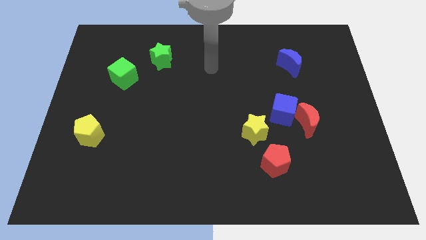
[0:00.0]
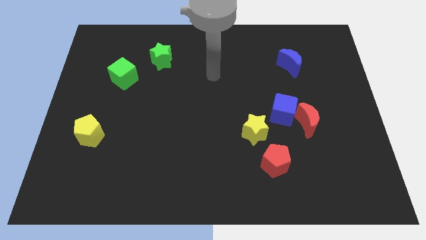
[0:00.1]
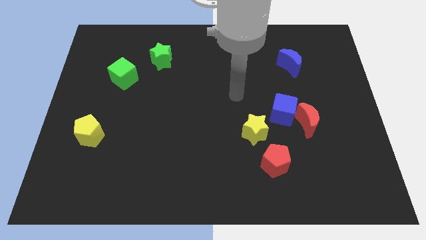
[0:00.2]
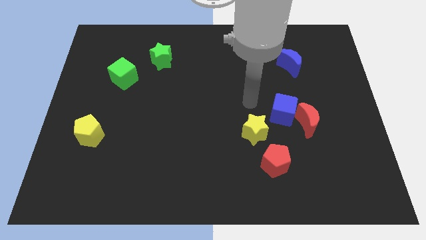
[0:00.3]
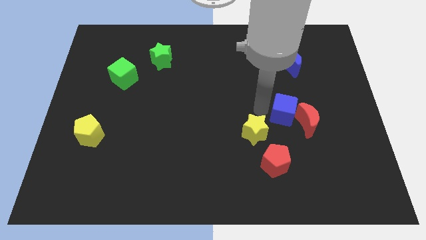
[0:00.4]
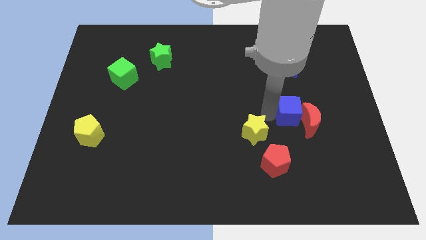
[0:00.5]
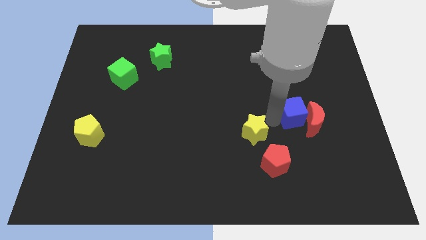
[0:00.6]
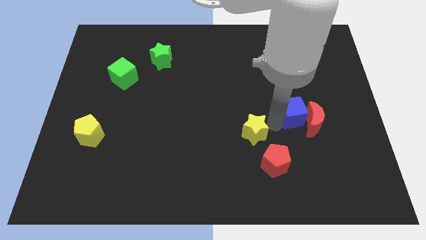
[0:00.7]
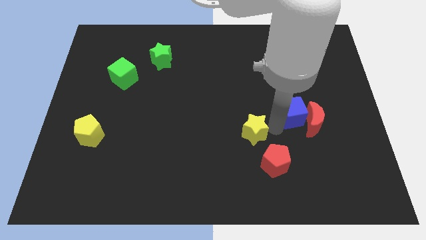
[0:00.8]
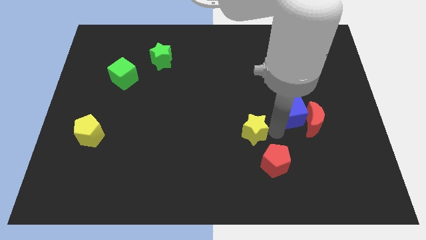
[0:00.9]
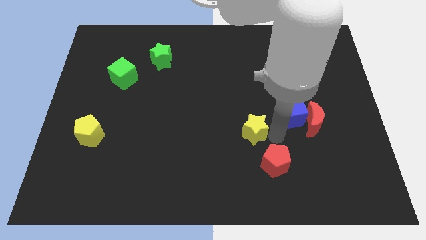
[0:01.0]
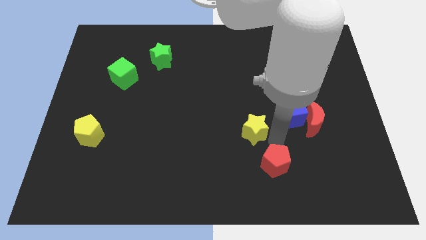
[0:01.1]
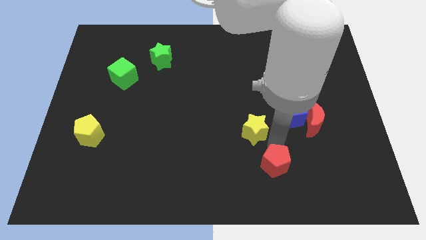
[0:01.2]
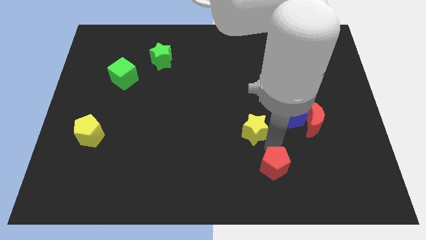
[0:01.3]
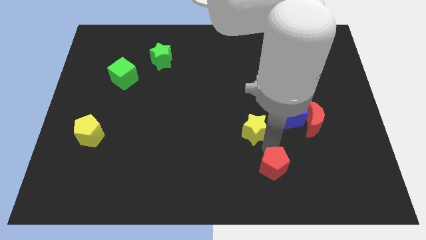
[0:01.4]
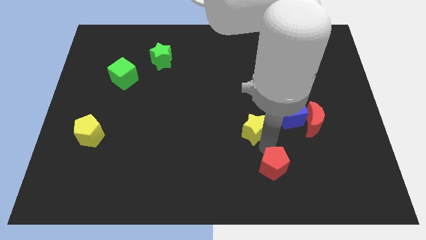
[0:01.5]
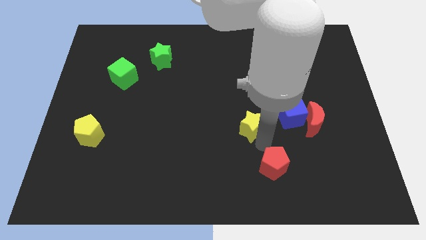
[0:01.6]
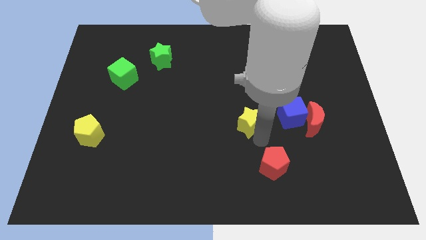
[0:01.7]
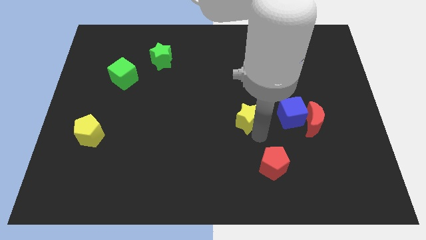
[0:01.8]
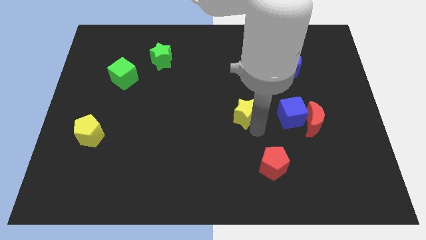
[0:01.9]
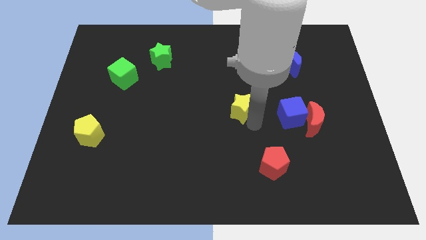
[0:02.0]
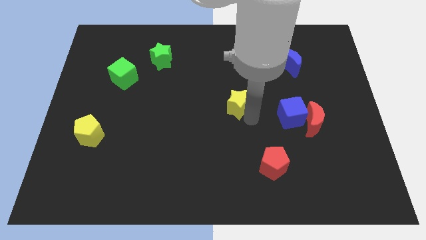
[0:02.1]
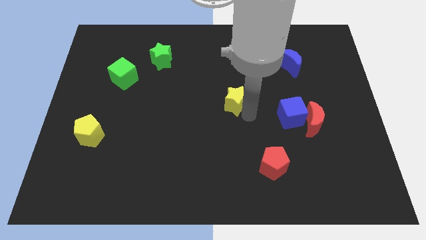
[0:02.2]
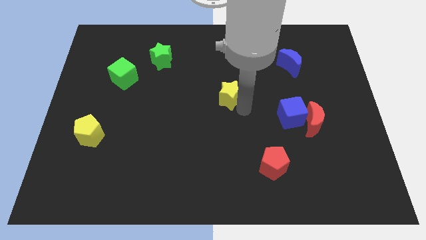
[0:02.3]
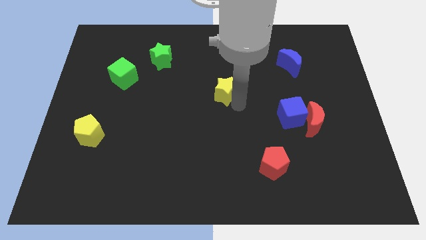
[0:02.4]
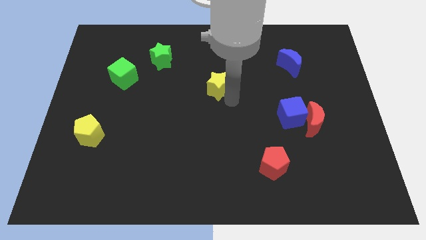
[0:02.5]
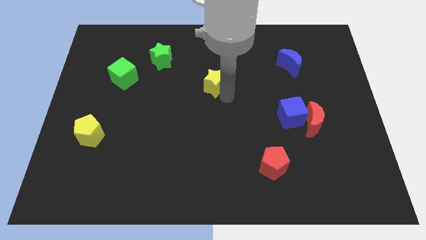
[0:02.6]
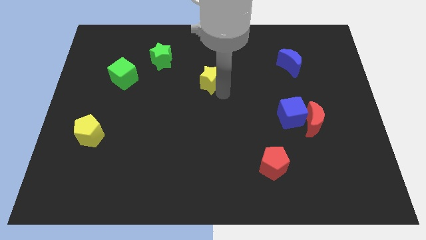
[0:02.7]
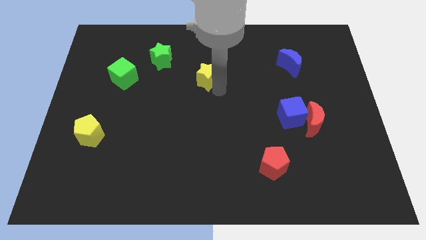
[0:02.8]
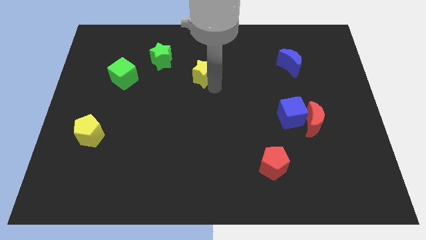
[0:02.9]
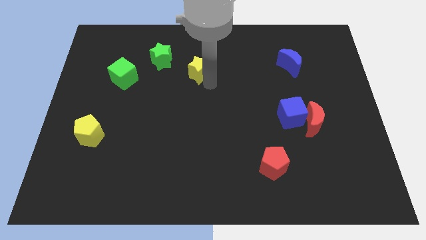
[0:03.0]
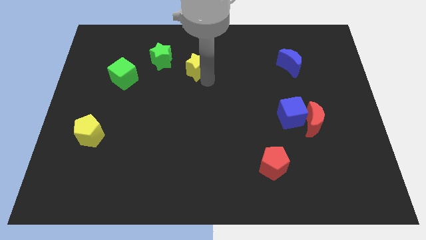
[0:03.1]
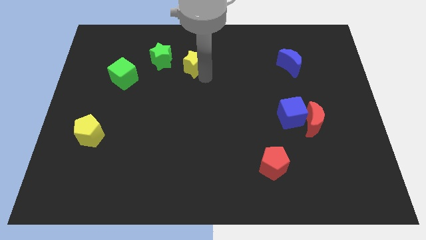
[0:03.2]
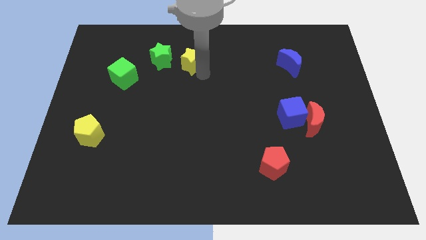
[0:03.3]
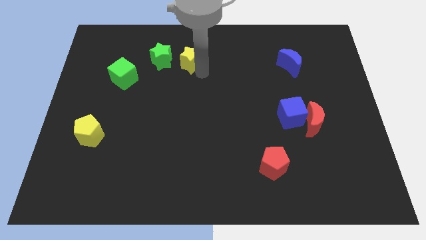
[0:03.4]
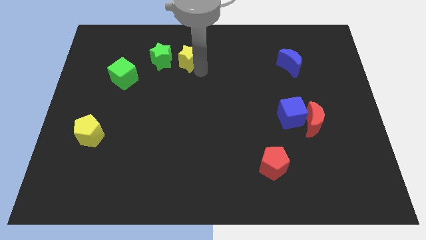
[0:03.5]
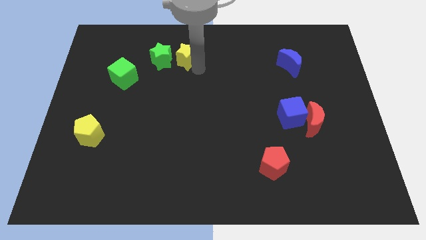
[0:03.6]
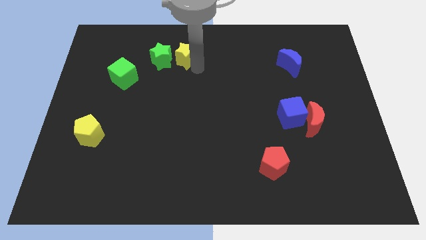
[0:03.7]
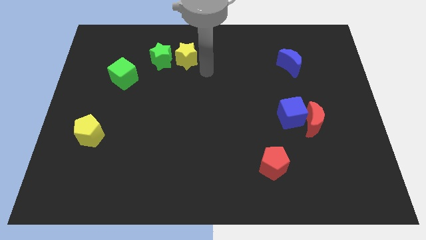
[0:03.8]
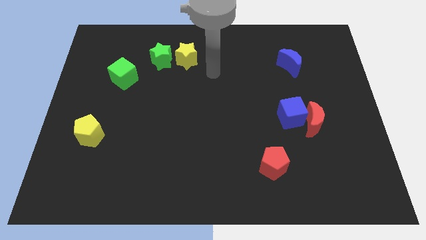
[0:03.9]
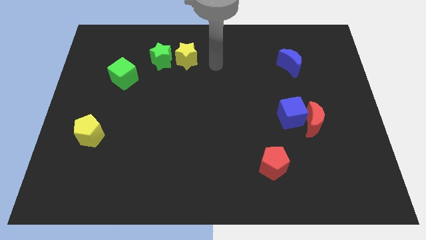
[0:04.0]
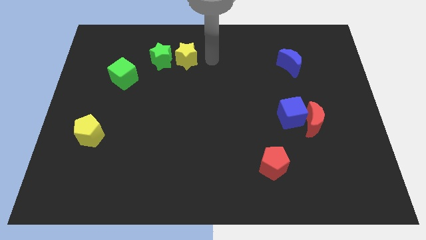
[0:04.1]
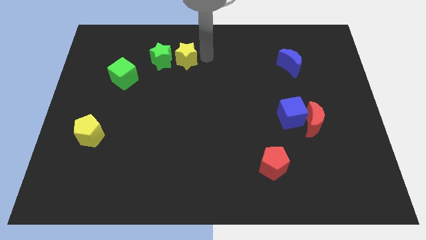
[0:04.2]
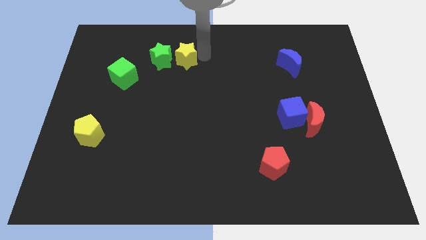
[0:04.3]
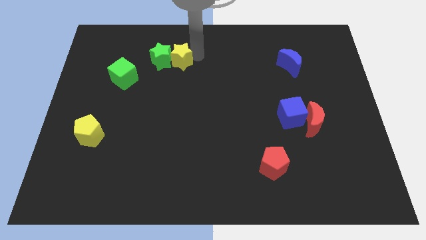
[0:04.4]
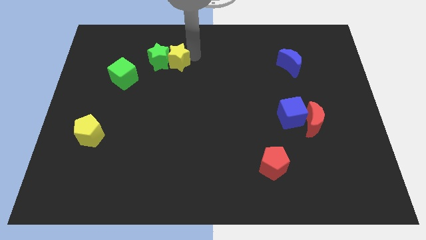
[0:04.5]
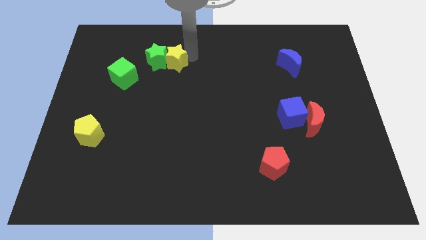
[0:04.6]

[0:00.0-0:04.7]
slide the yellow star next to the green star

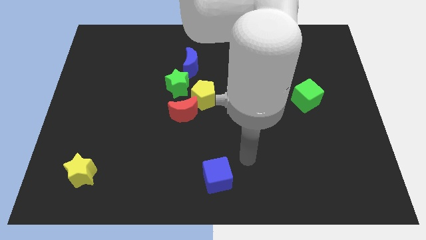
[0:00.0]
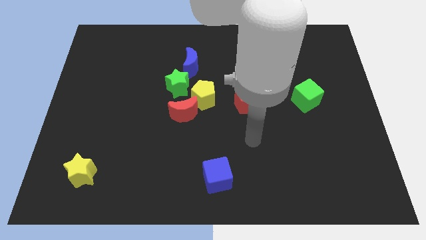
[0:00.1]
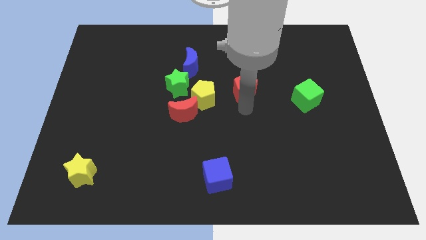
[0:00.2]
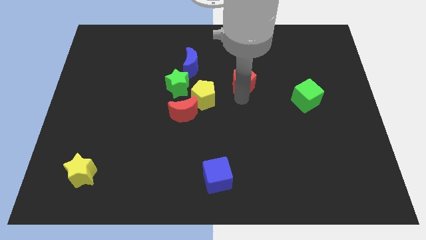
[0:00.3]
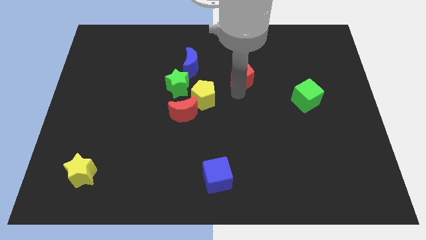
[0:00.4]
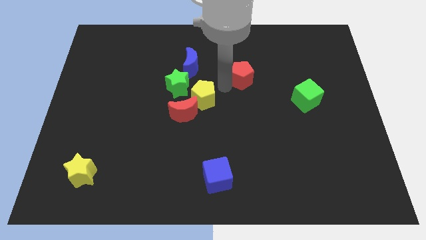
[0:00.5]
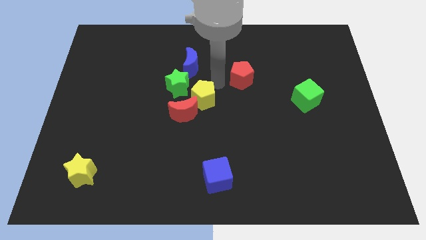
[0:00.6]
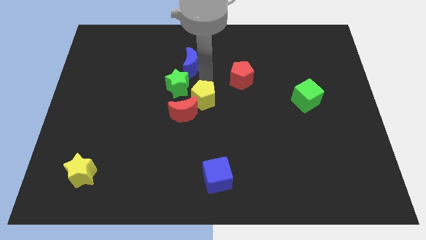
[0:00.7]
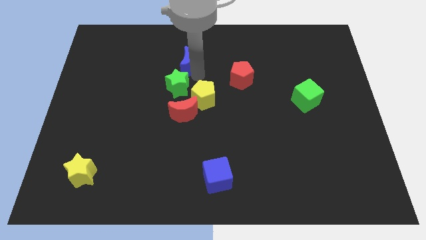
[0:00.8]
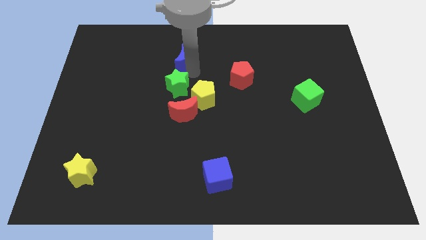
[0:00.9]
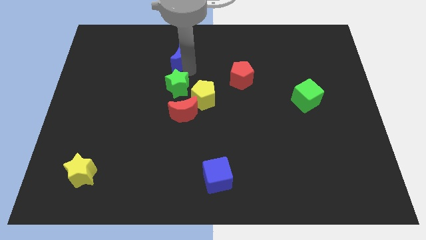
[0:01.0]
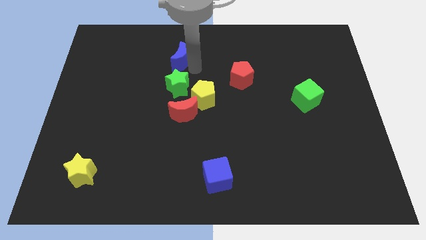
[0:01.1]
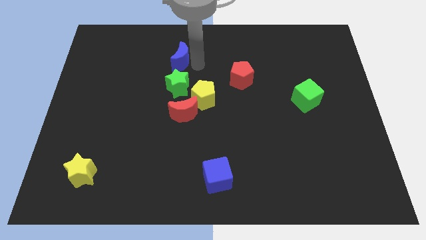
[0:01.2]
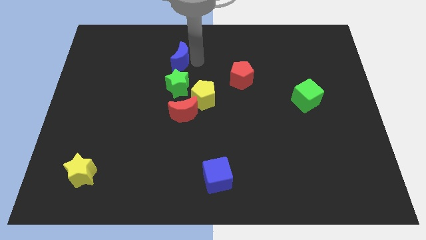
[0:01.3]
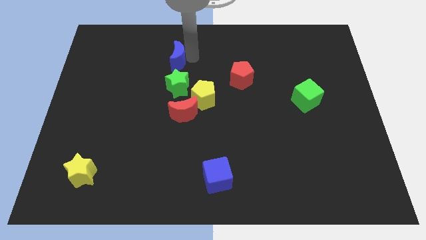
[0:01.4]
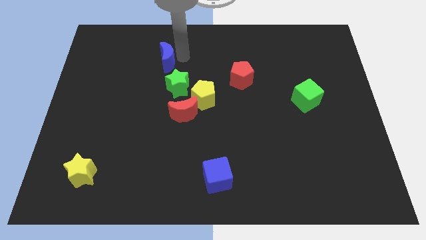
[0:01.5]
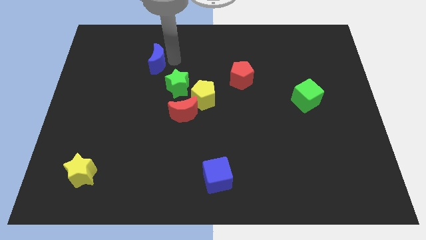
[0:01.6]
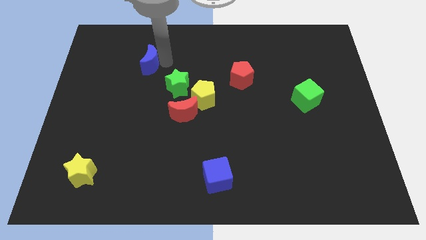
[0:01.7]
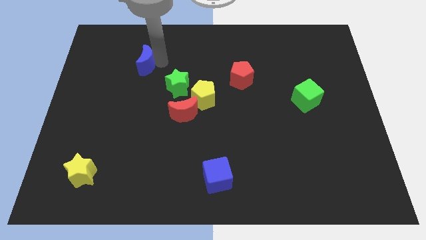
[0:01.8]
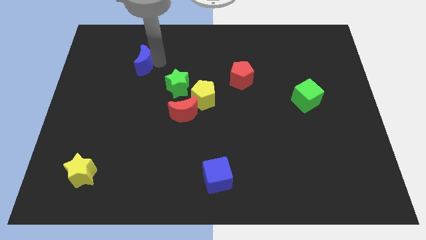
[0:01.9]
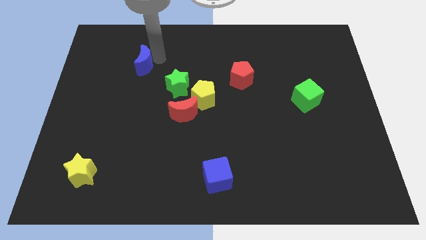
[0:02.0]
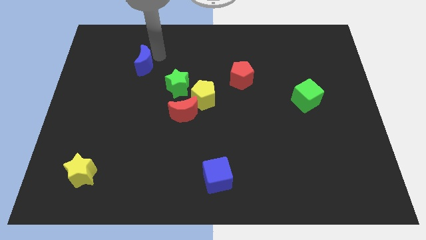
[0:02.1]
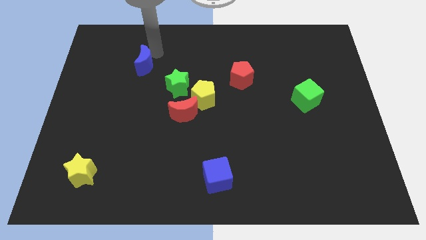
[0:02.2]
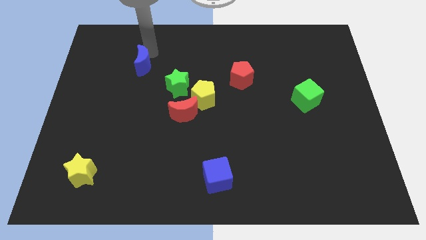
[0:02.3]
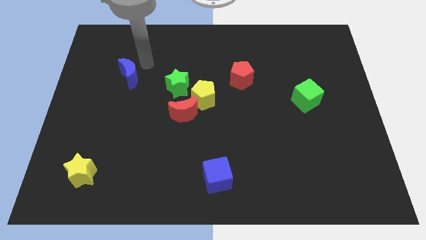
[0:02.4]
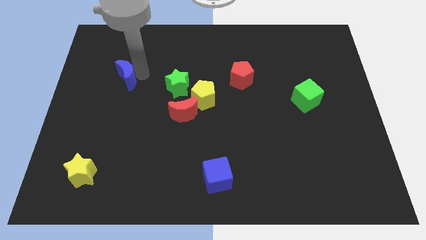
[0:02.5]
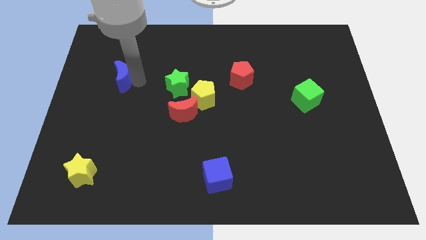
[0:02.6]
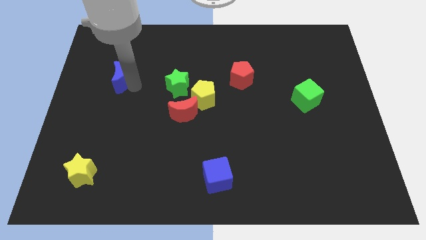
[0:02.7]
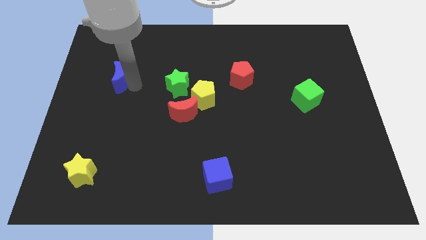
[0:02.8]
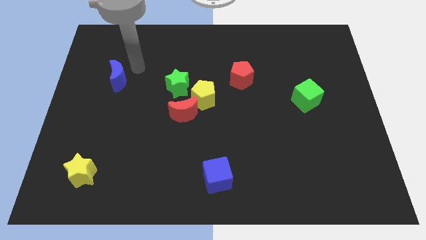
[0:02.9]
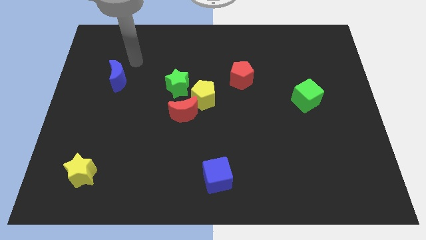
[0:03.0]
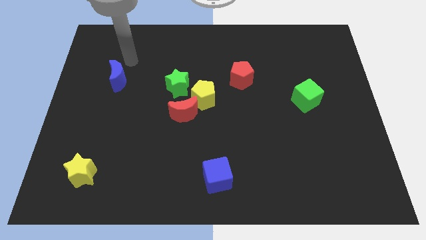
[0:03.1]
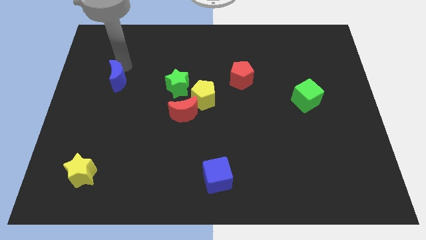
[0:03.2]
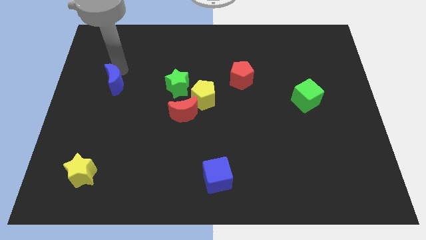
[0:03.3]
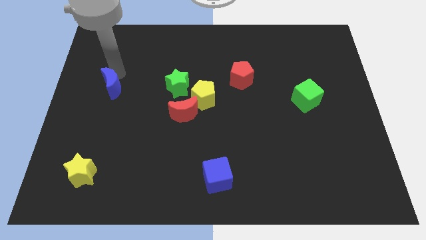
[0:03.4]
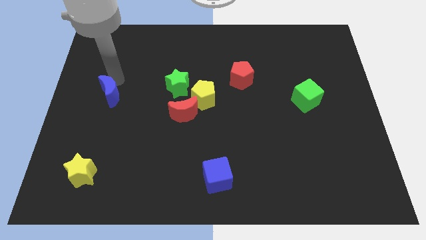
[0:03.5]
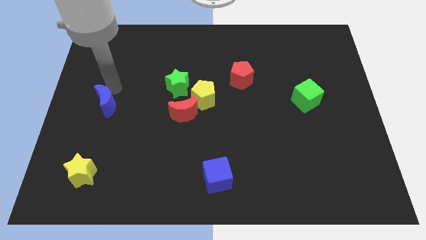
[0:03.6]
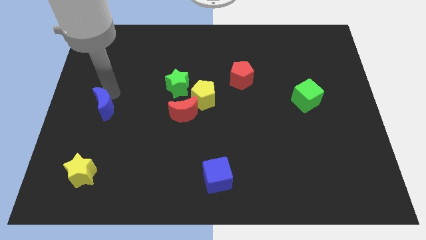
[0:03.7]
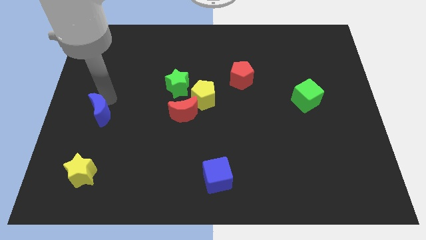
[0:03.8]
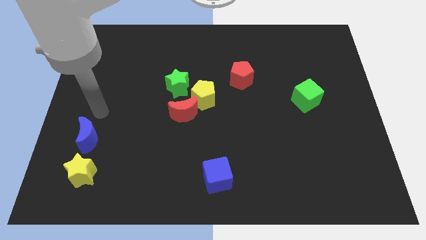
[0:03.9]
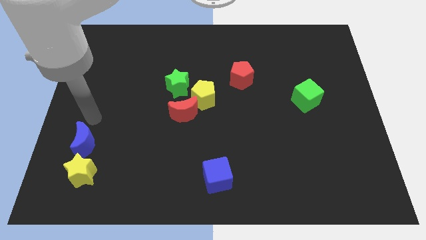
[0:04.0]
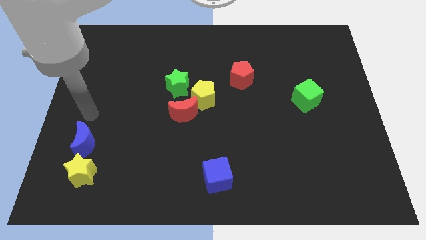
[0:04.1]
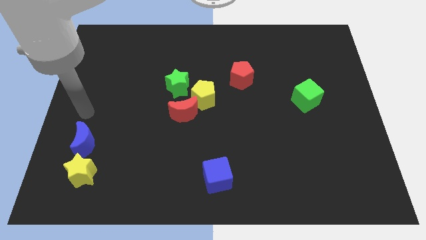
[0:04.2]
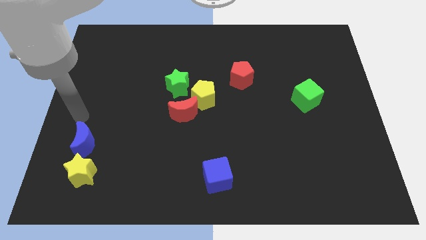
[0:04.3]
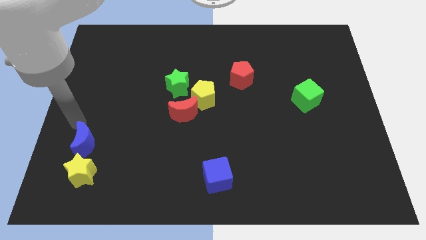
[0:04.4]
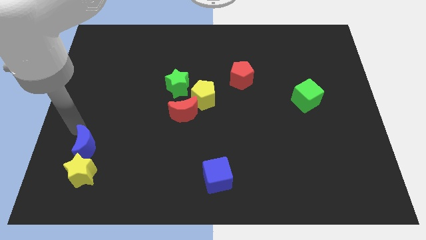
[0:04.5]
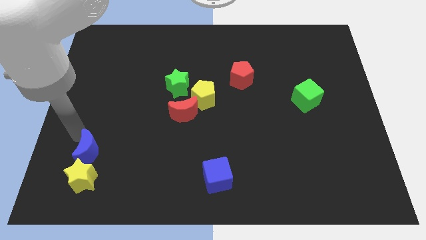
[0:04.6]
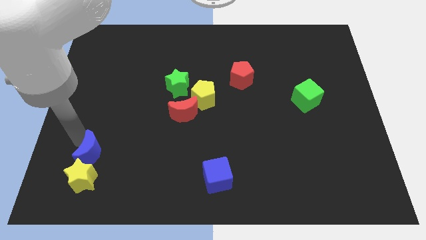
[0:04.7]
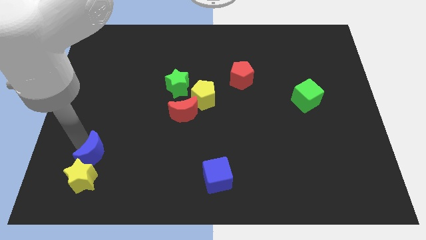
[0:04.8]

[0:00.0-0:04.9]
slide the blue moon next to the yellow star
